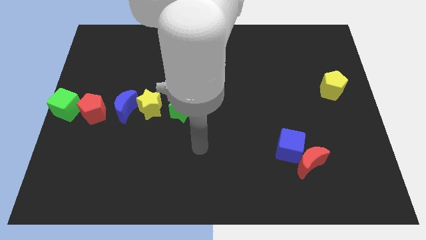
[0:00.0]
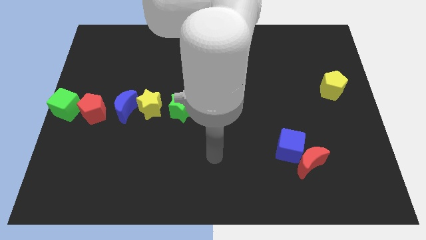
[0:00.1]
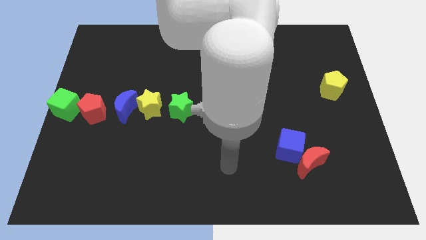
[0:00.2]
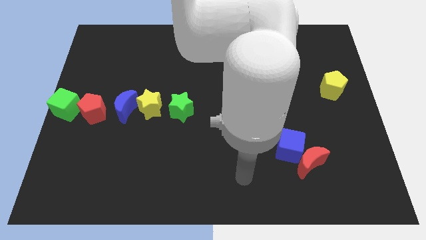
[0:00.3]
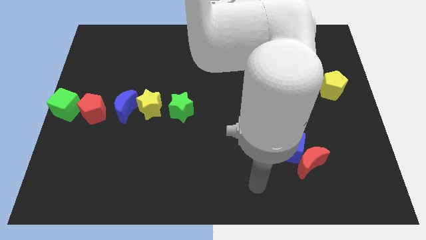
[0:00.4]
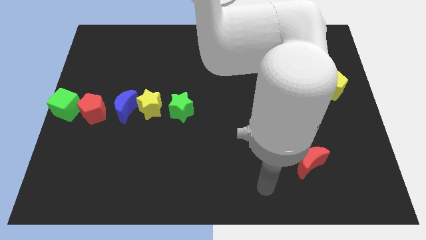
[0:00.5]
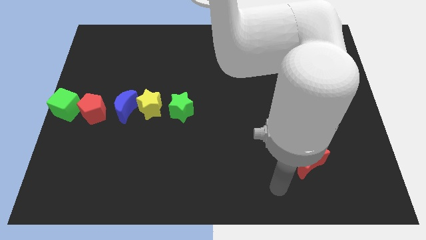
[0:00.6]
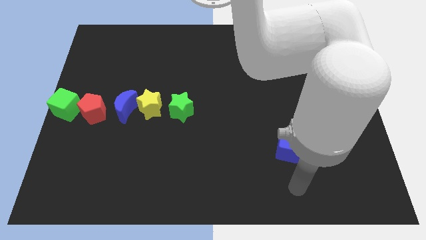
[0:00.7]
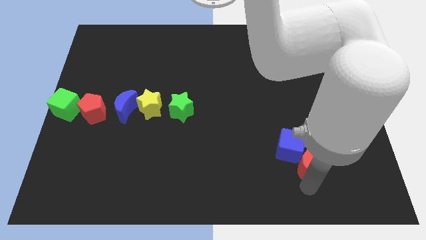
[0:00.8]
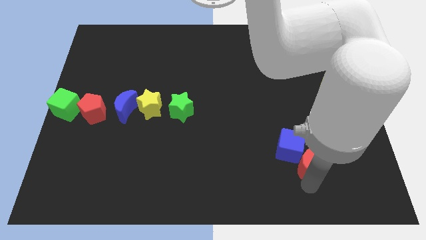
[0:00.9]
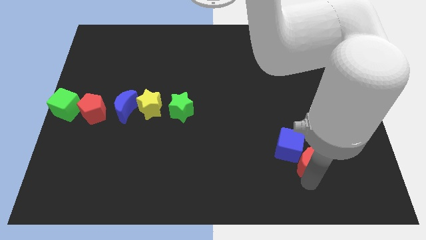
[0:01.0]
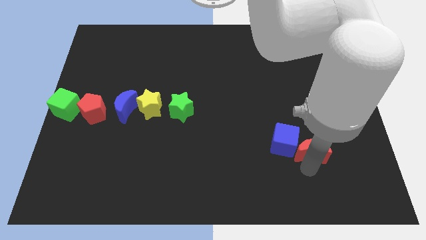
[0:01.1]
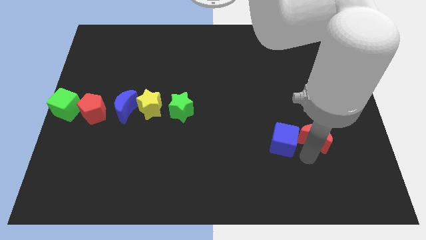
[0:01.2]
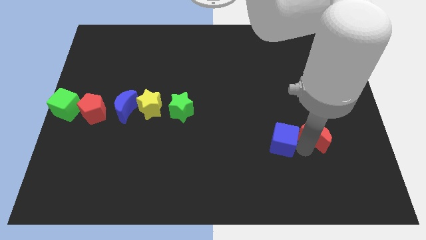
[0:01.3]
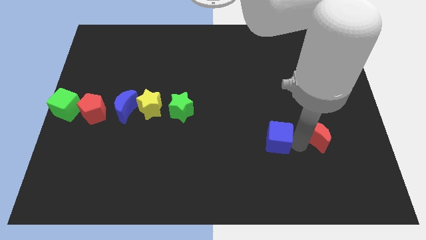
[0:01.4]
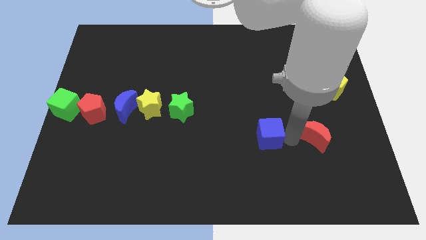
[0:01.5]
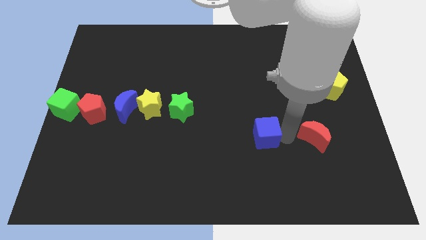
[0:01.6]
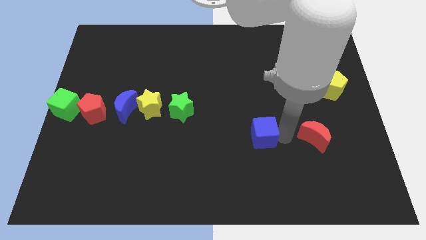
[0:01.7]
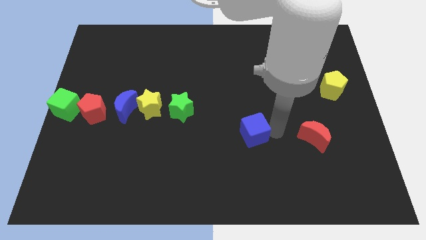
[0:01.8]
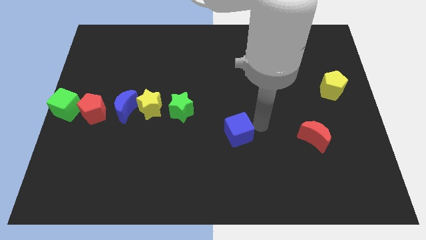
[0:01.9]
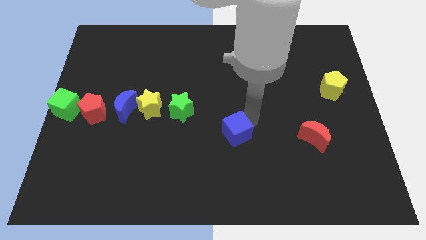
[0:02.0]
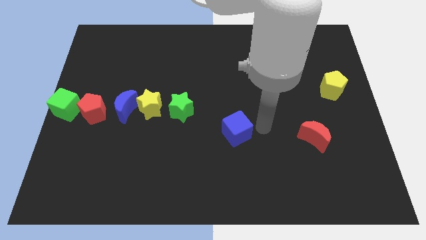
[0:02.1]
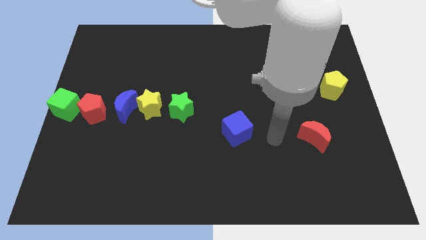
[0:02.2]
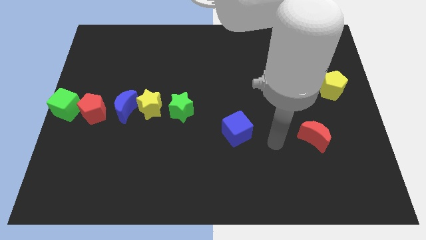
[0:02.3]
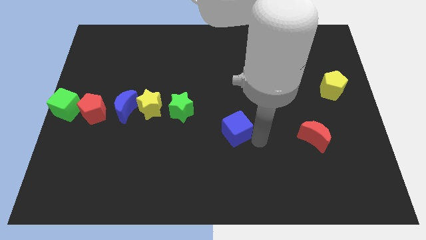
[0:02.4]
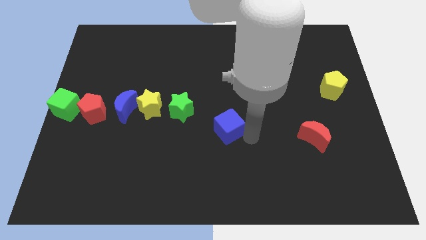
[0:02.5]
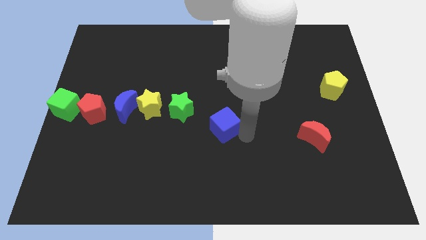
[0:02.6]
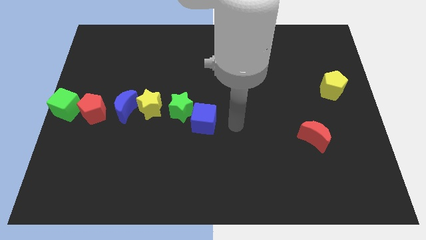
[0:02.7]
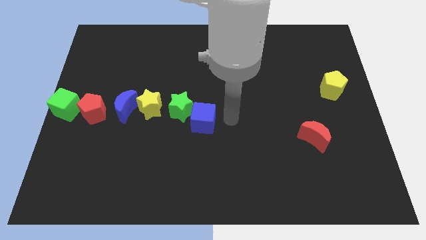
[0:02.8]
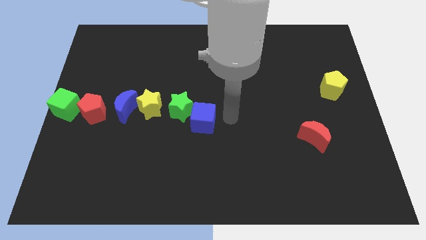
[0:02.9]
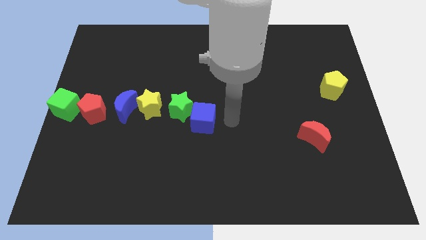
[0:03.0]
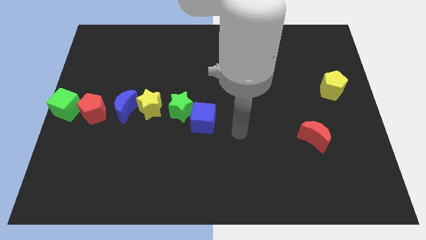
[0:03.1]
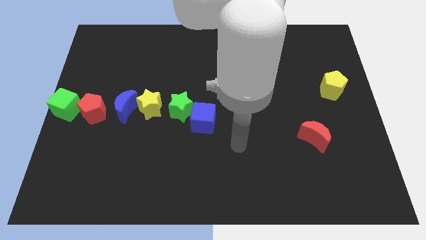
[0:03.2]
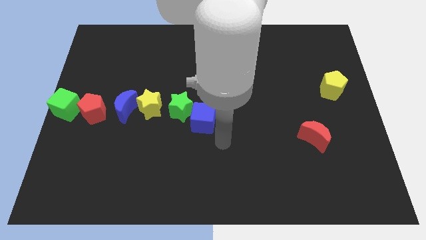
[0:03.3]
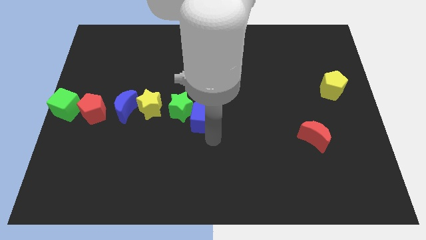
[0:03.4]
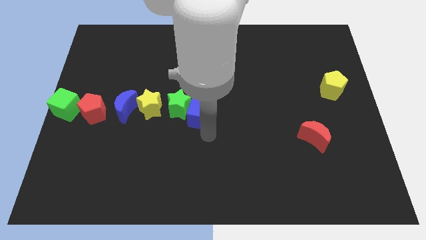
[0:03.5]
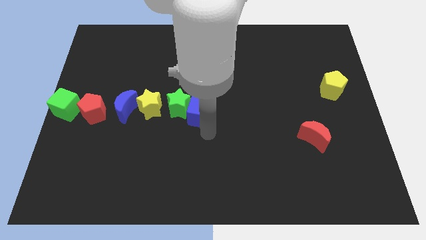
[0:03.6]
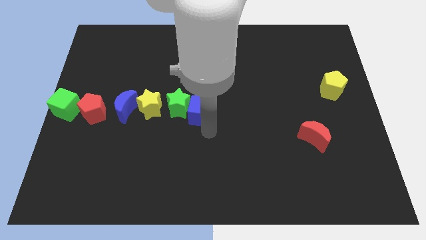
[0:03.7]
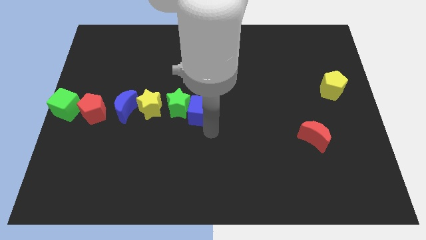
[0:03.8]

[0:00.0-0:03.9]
push the blue cube into the green star

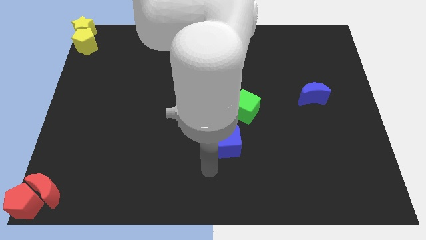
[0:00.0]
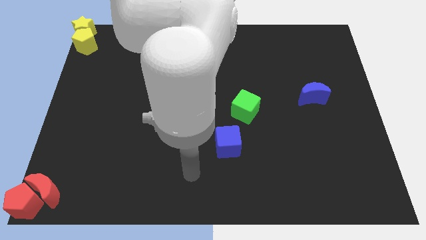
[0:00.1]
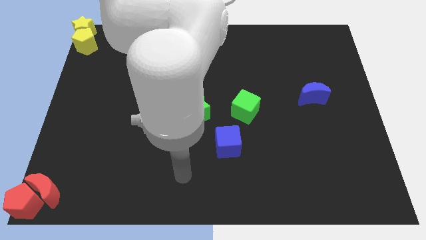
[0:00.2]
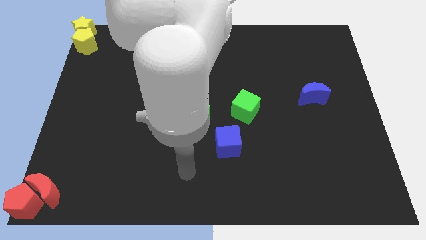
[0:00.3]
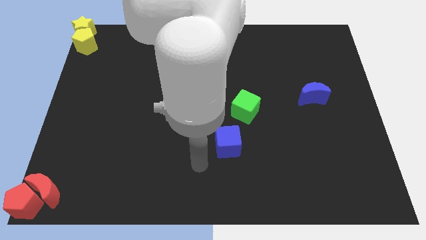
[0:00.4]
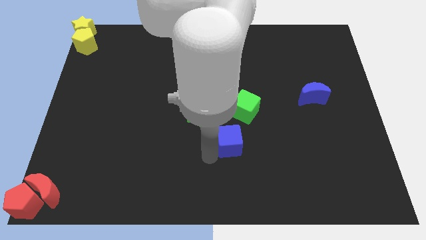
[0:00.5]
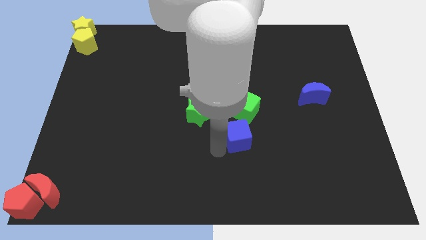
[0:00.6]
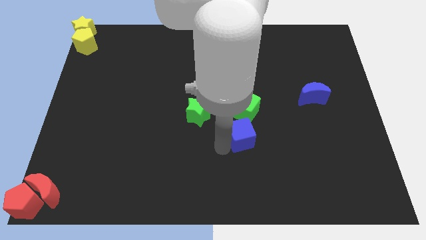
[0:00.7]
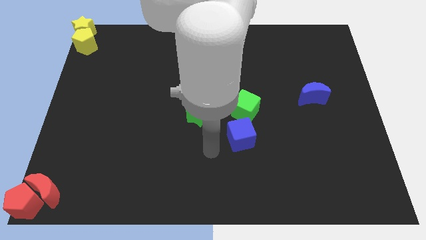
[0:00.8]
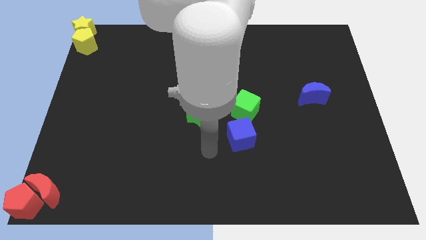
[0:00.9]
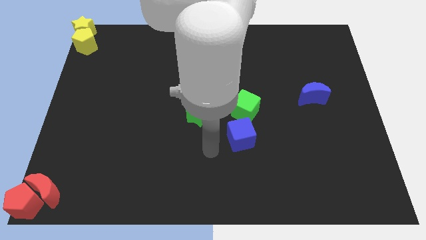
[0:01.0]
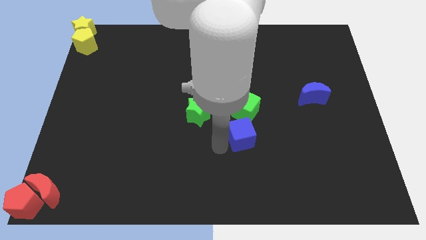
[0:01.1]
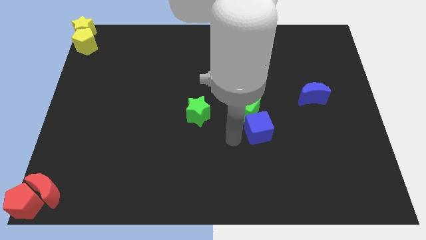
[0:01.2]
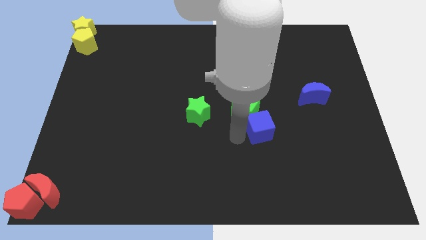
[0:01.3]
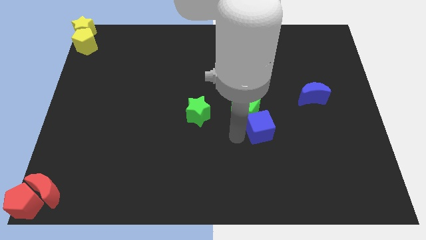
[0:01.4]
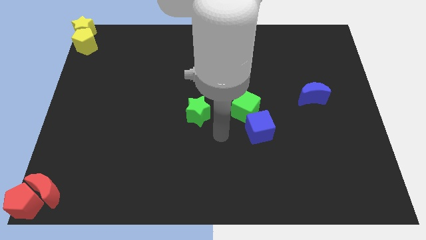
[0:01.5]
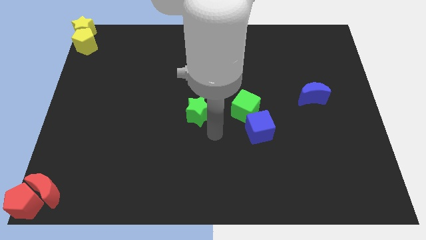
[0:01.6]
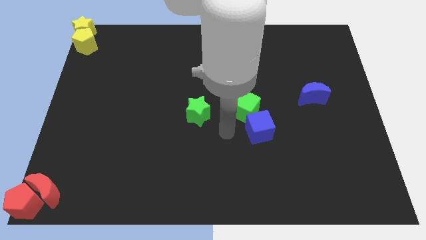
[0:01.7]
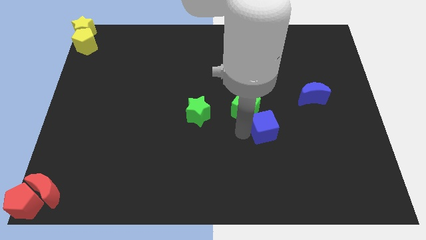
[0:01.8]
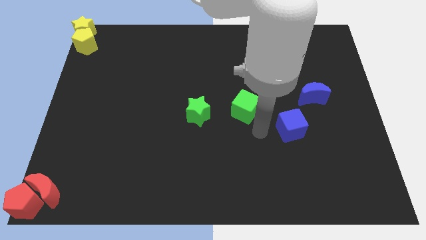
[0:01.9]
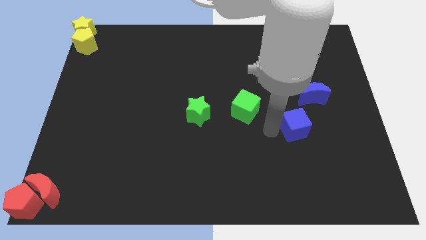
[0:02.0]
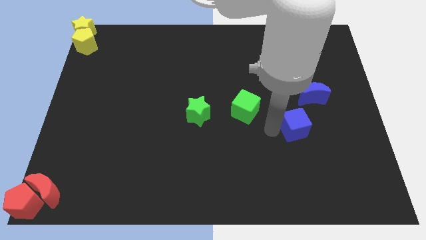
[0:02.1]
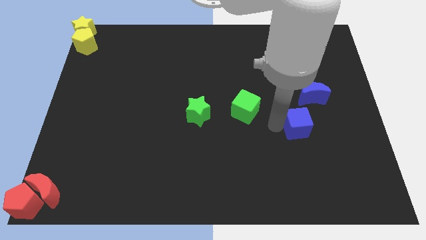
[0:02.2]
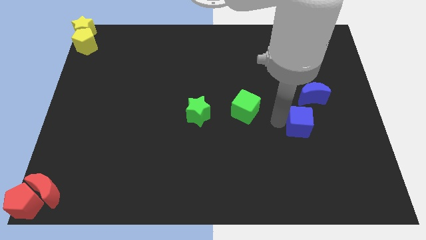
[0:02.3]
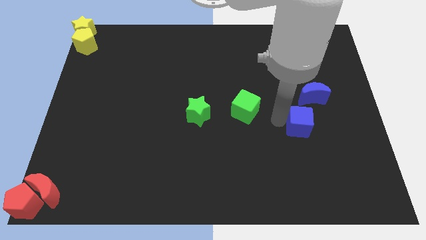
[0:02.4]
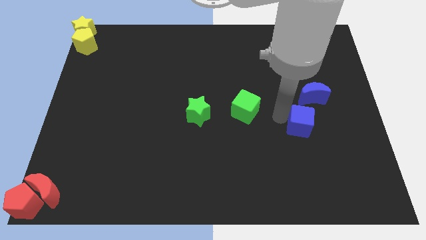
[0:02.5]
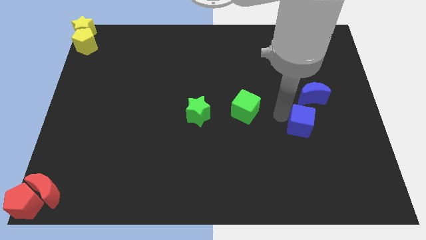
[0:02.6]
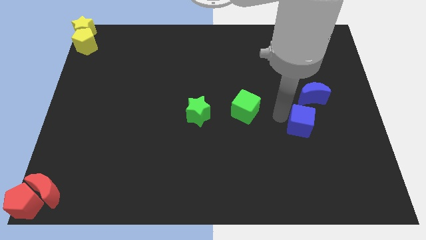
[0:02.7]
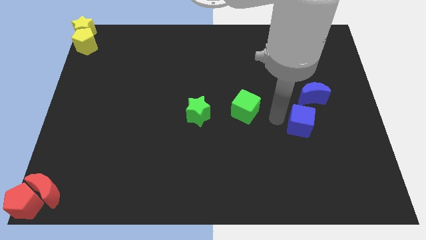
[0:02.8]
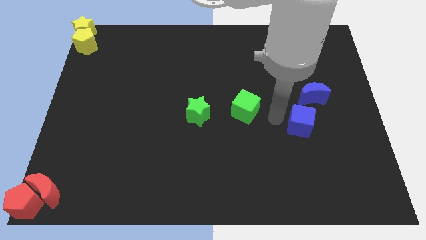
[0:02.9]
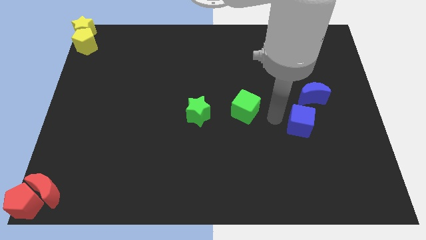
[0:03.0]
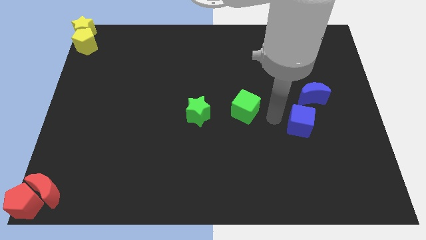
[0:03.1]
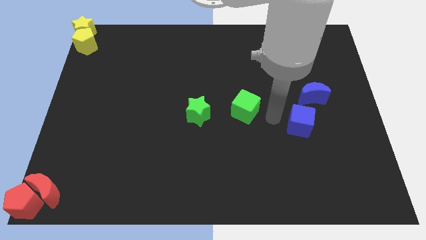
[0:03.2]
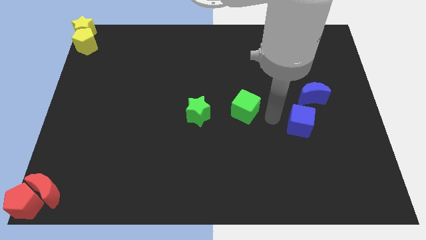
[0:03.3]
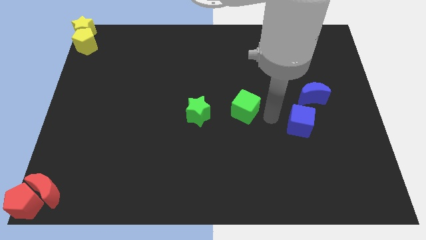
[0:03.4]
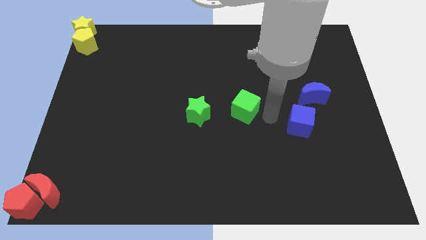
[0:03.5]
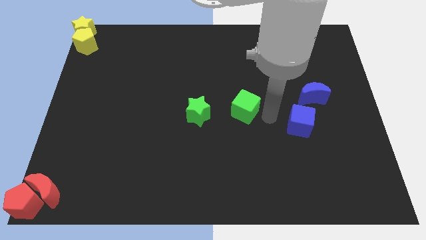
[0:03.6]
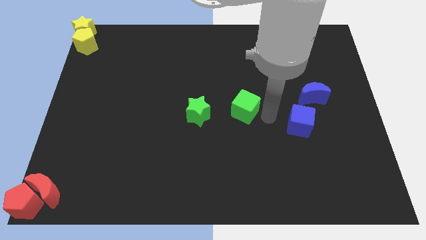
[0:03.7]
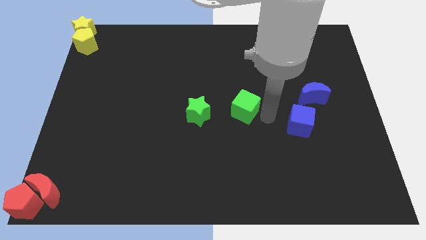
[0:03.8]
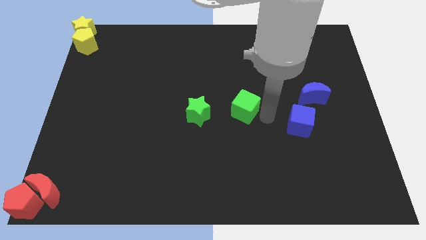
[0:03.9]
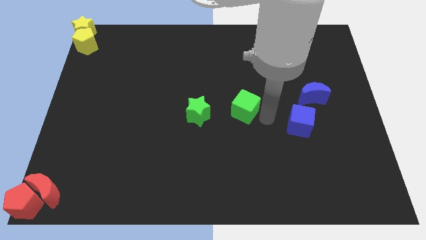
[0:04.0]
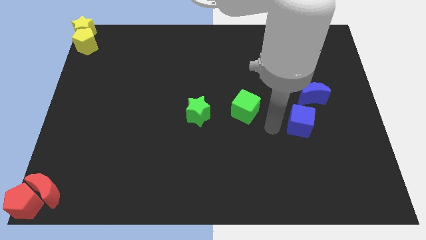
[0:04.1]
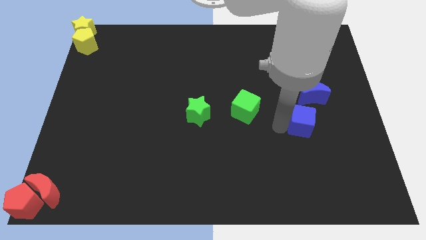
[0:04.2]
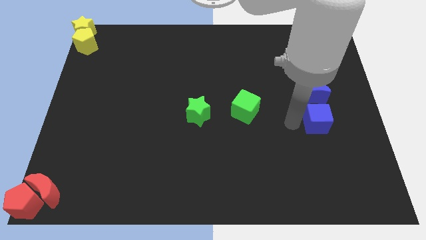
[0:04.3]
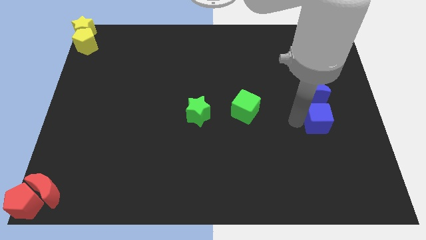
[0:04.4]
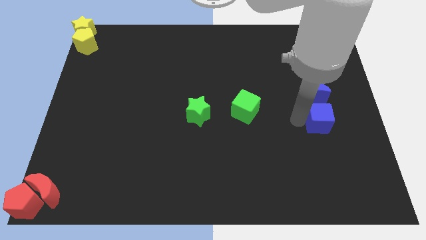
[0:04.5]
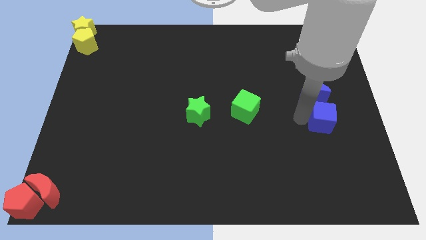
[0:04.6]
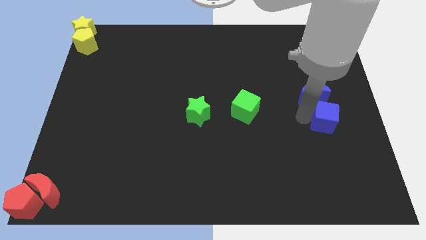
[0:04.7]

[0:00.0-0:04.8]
place the blue cube below the blue crescent

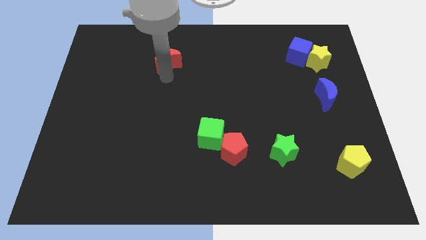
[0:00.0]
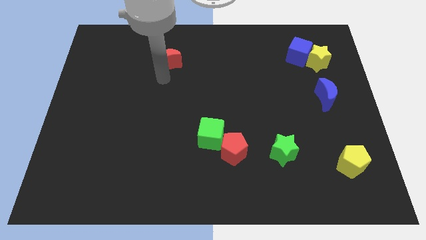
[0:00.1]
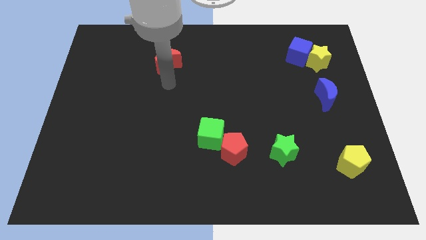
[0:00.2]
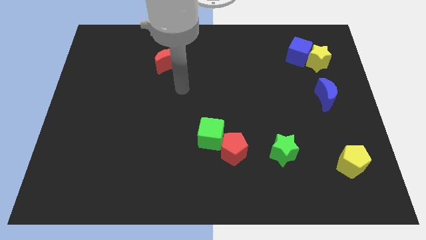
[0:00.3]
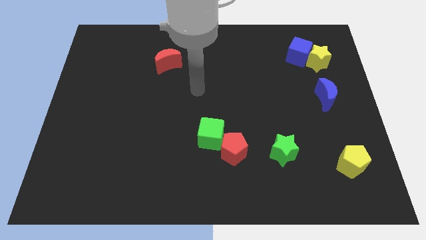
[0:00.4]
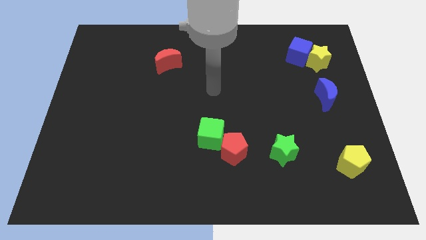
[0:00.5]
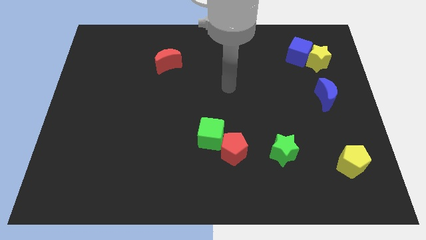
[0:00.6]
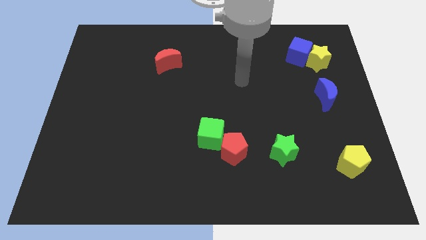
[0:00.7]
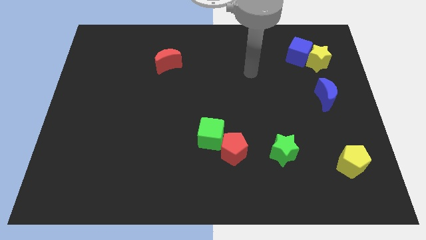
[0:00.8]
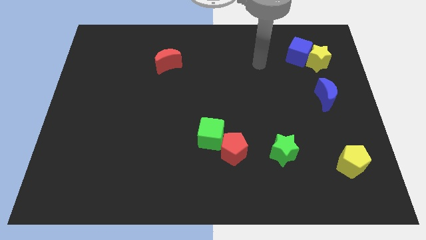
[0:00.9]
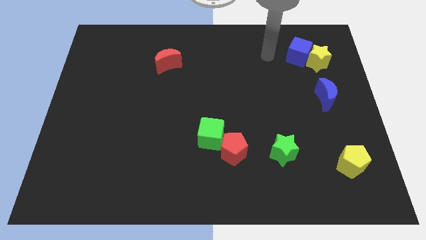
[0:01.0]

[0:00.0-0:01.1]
move the arm away from the red crescent
